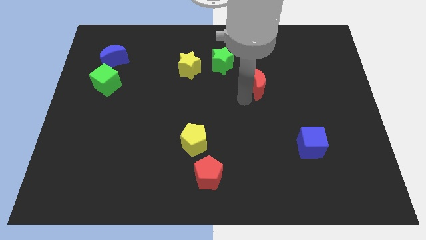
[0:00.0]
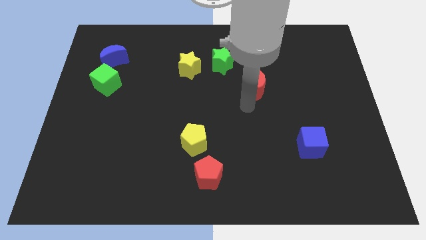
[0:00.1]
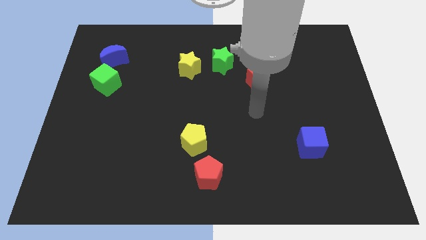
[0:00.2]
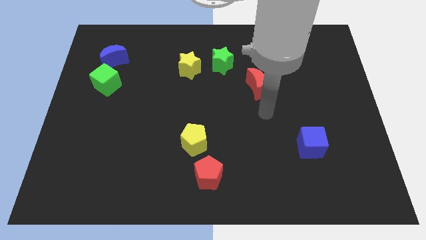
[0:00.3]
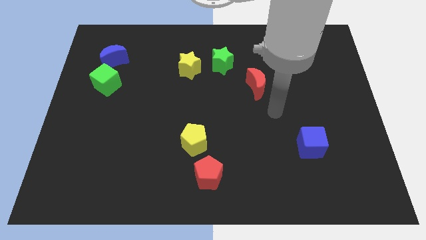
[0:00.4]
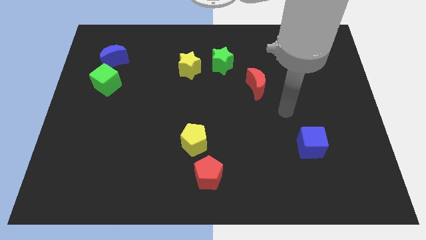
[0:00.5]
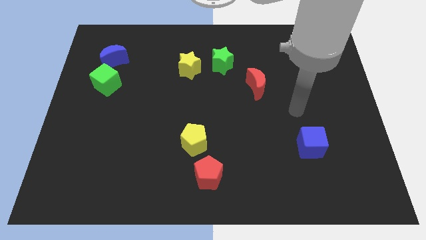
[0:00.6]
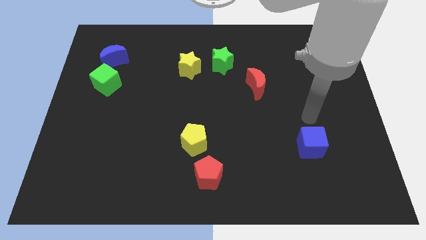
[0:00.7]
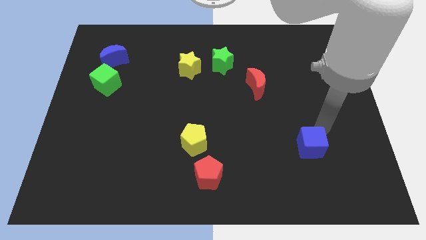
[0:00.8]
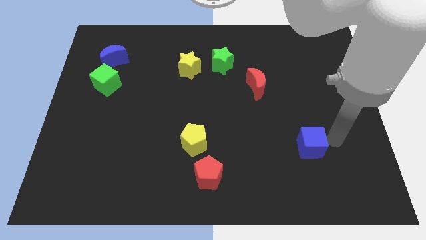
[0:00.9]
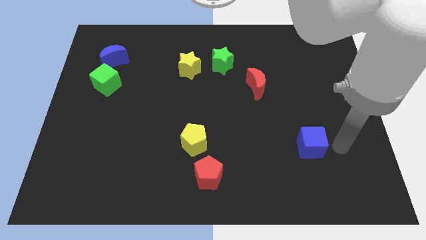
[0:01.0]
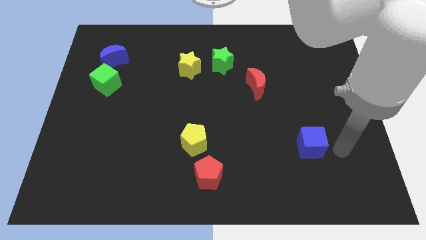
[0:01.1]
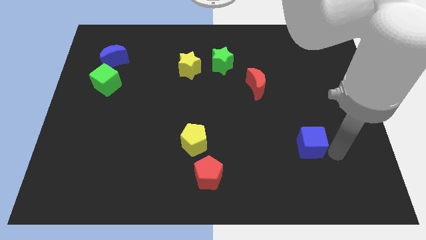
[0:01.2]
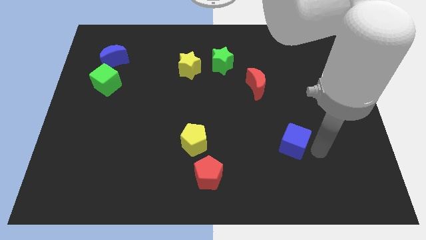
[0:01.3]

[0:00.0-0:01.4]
move your arm towards blue cube

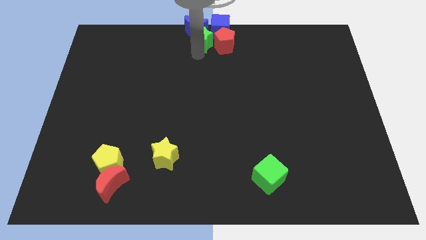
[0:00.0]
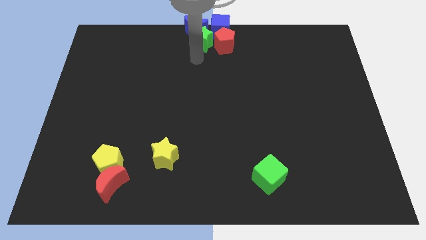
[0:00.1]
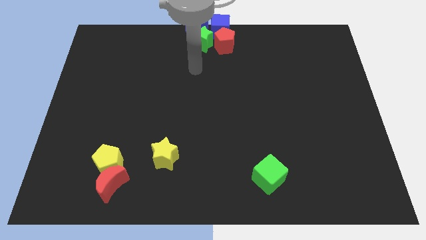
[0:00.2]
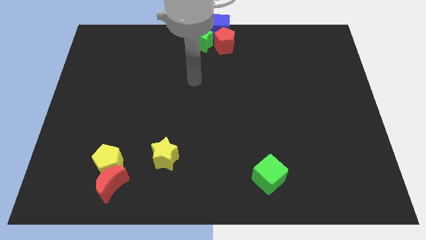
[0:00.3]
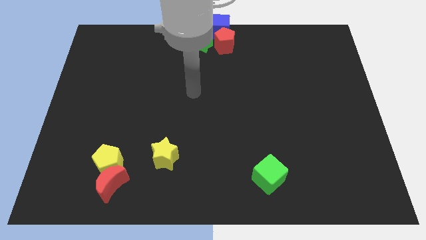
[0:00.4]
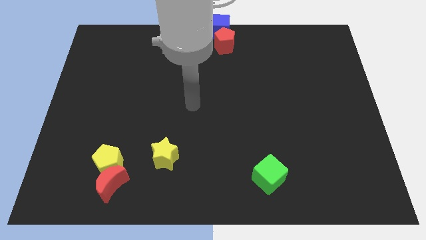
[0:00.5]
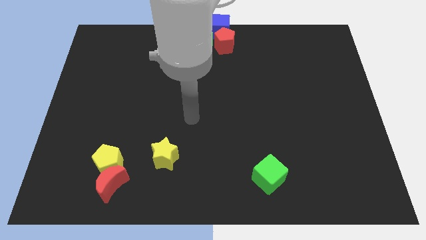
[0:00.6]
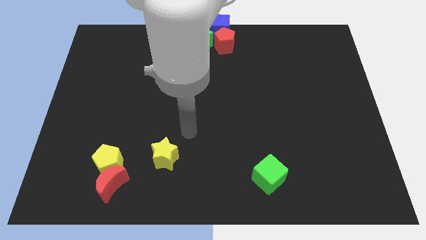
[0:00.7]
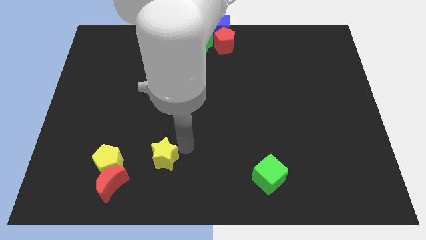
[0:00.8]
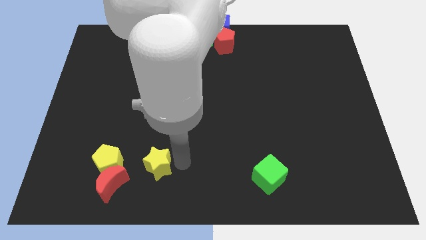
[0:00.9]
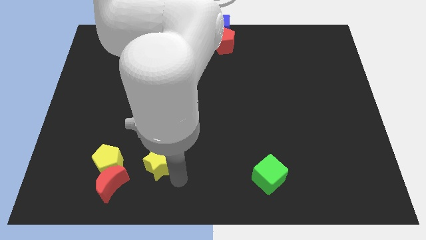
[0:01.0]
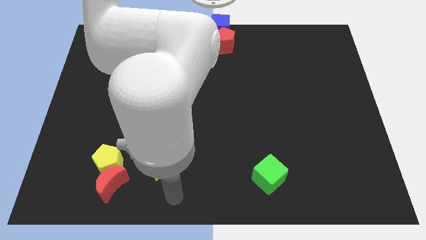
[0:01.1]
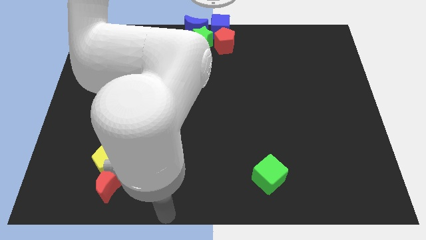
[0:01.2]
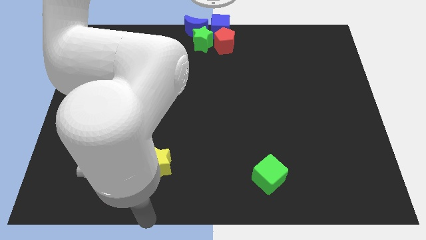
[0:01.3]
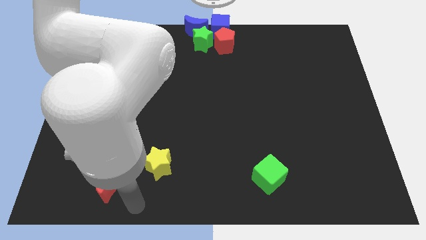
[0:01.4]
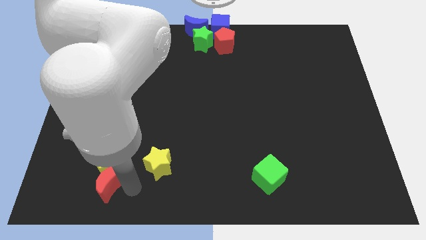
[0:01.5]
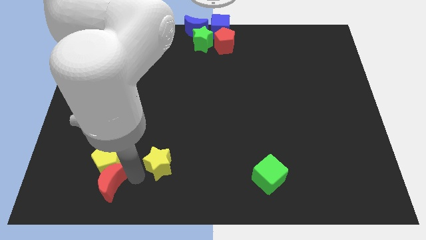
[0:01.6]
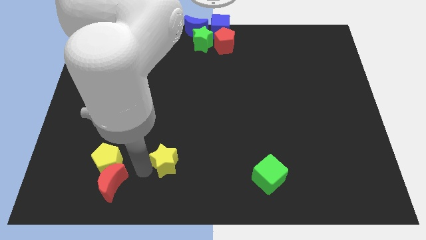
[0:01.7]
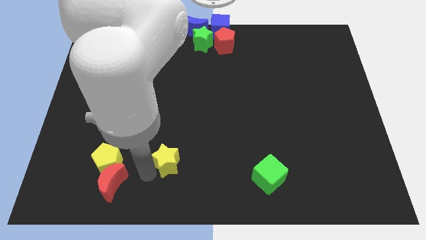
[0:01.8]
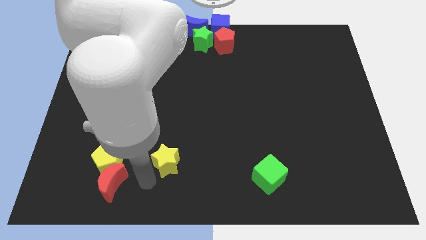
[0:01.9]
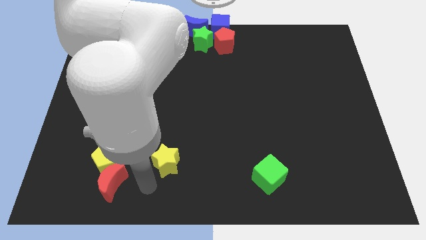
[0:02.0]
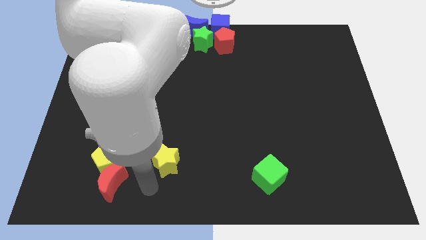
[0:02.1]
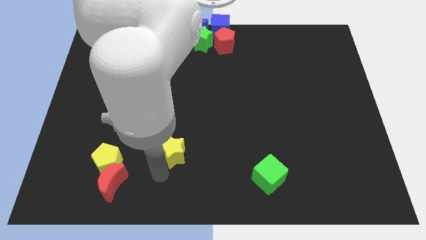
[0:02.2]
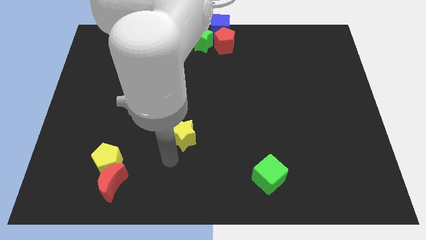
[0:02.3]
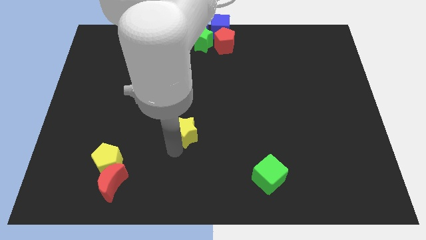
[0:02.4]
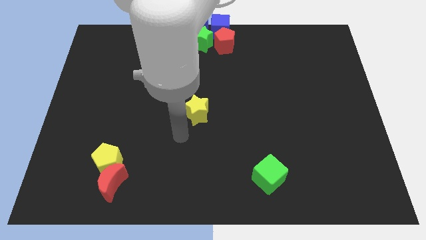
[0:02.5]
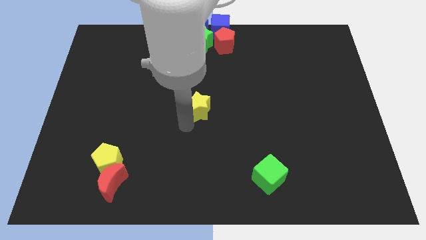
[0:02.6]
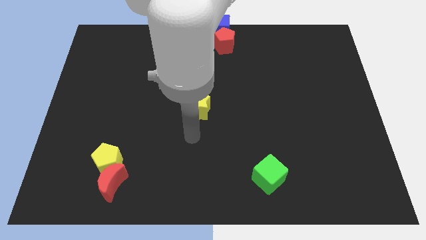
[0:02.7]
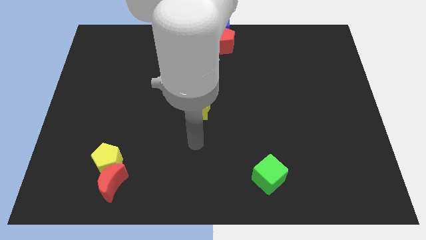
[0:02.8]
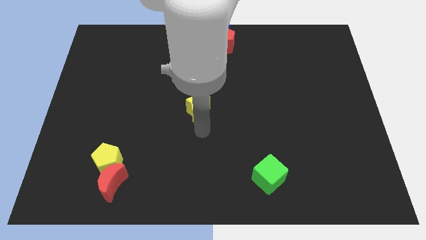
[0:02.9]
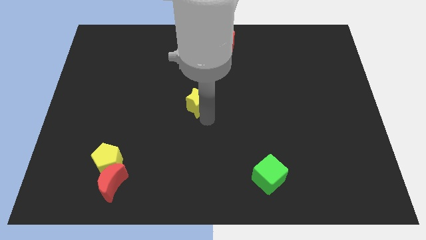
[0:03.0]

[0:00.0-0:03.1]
slide the yellow star to the center of the board

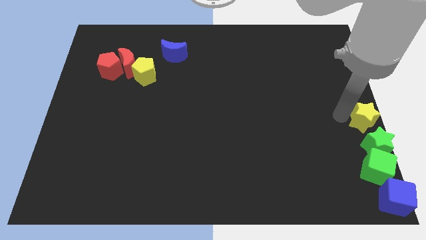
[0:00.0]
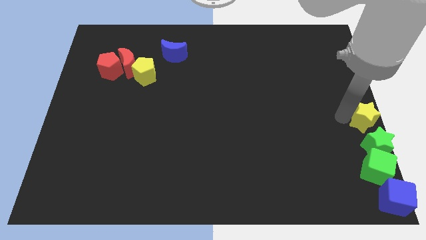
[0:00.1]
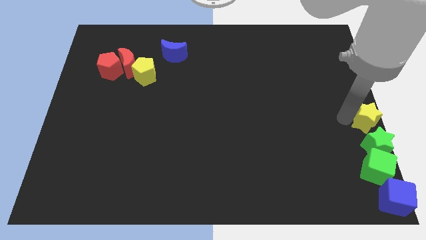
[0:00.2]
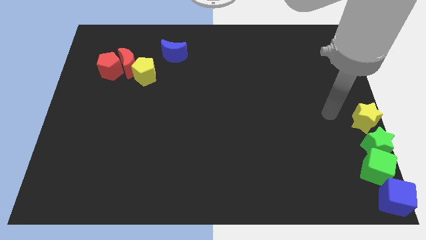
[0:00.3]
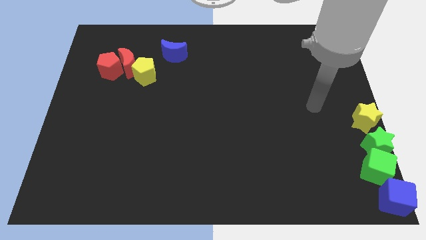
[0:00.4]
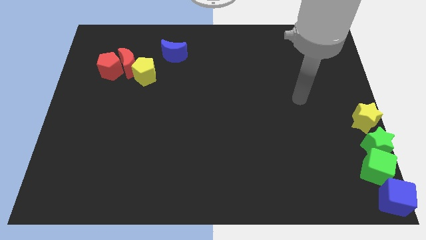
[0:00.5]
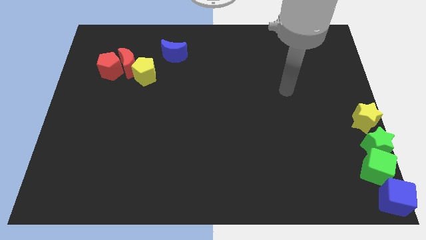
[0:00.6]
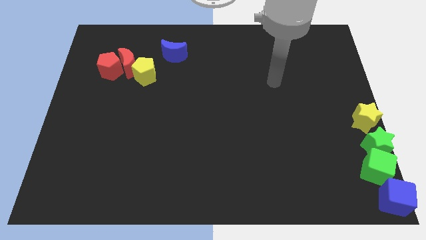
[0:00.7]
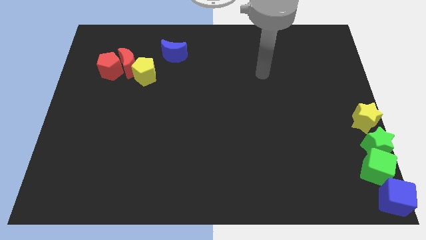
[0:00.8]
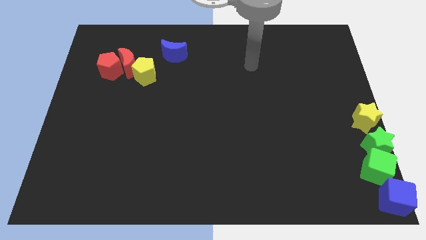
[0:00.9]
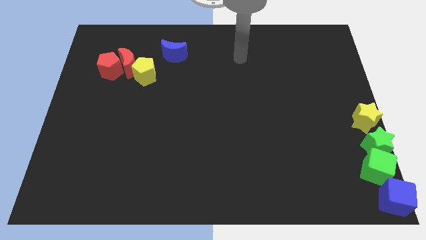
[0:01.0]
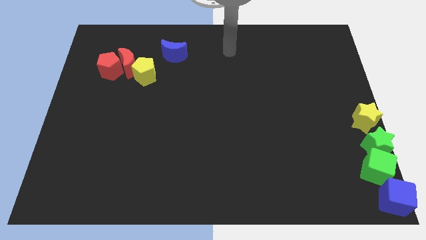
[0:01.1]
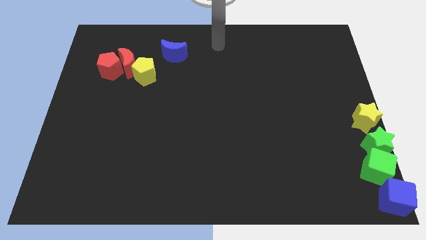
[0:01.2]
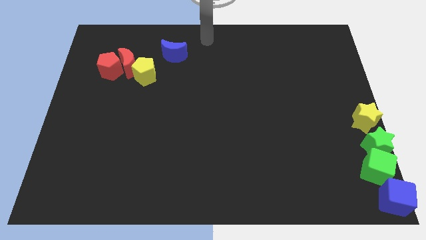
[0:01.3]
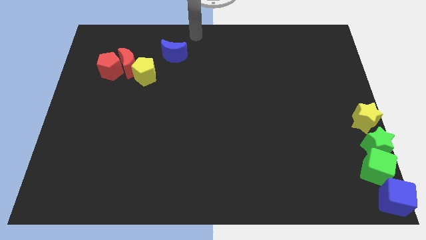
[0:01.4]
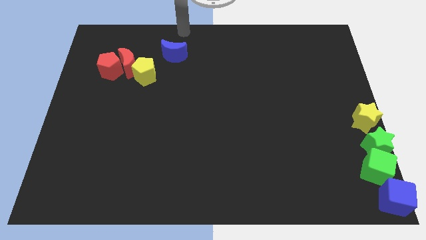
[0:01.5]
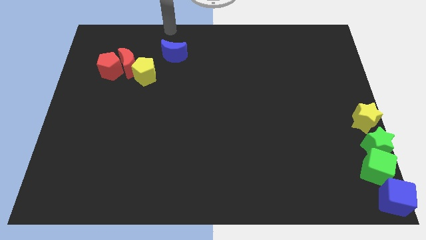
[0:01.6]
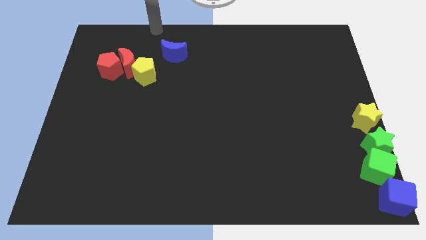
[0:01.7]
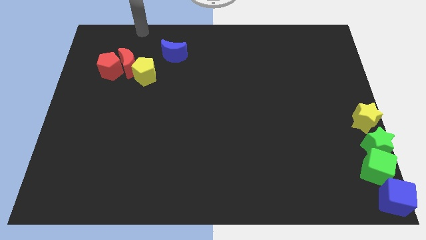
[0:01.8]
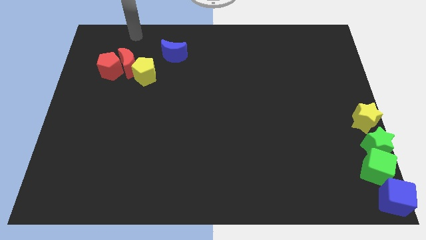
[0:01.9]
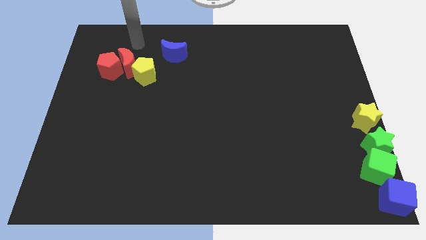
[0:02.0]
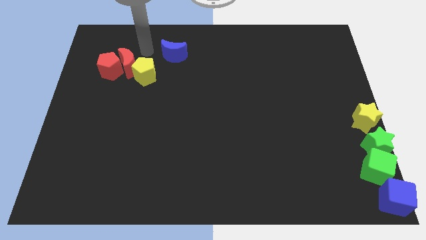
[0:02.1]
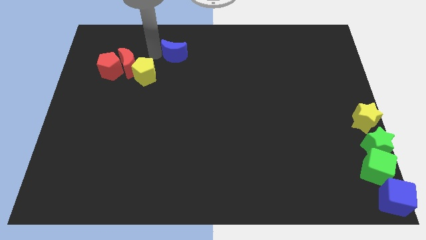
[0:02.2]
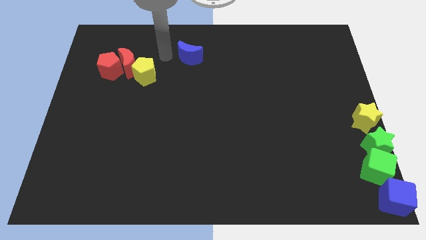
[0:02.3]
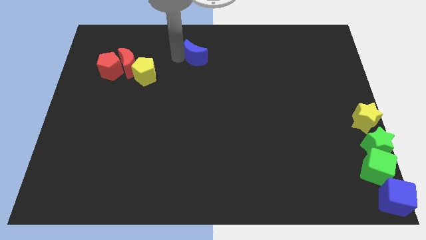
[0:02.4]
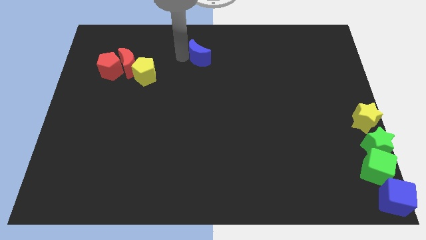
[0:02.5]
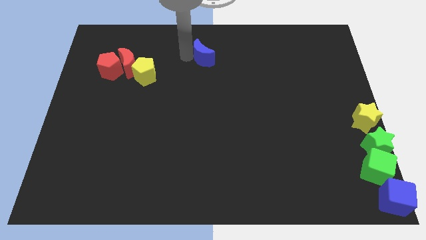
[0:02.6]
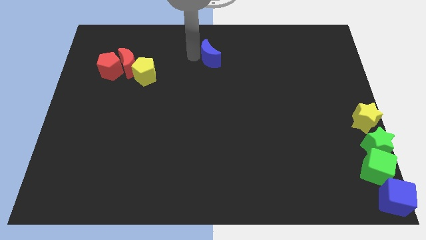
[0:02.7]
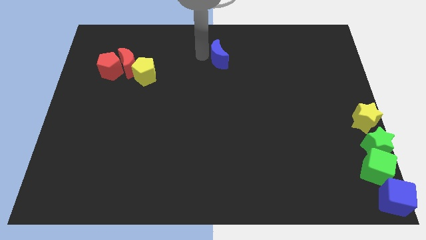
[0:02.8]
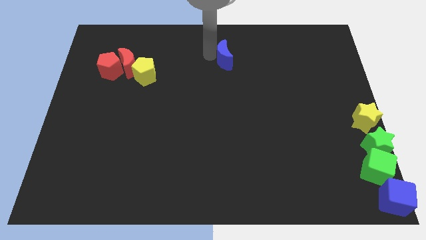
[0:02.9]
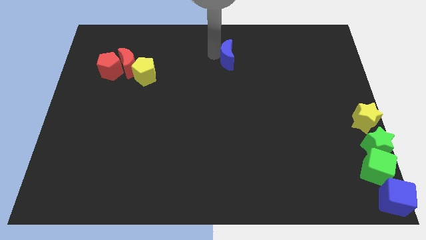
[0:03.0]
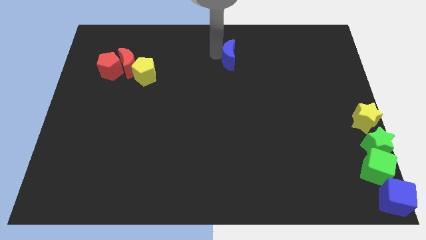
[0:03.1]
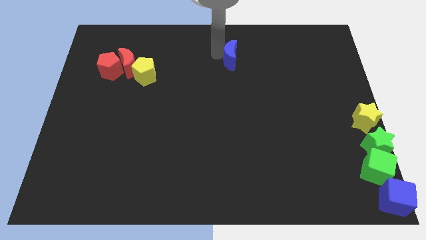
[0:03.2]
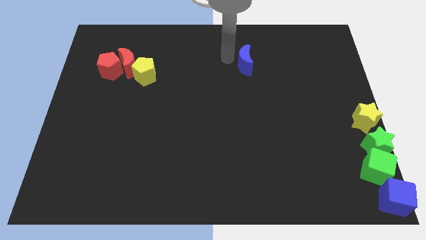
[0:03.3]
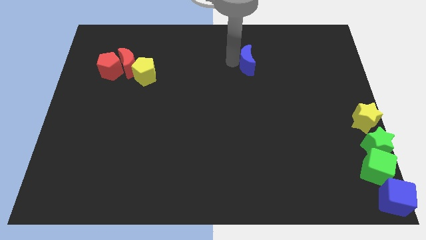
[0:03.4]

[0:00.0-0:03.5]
slightly move the blue moon towards the top center of the board

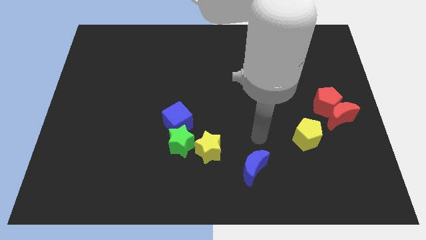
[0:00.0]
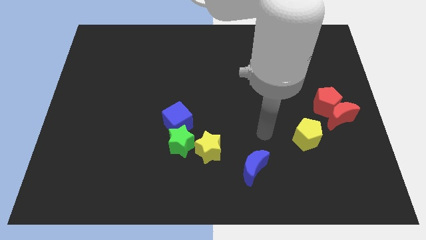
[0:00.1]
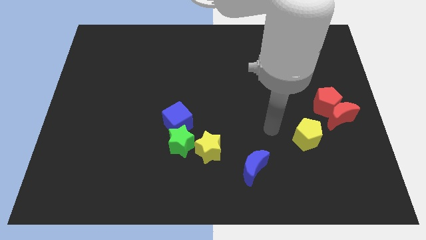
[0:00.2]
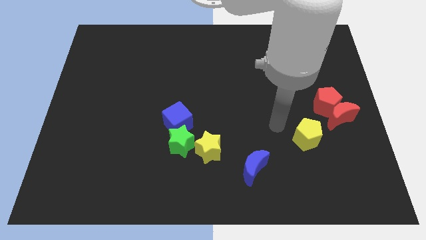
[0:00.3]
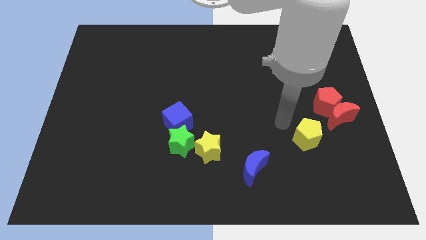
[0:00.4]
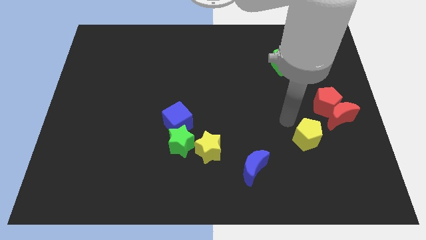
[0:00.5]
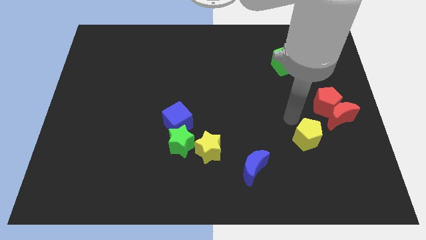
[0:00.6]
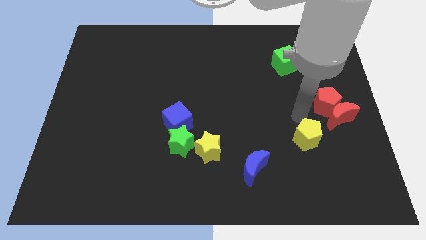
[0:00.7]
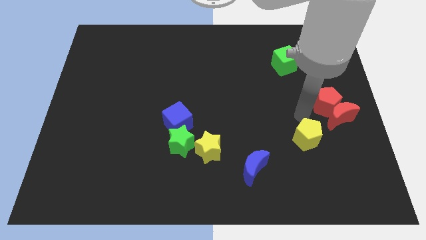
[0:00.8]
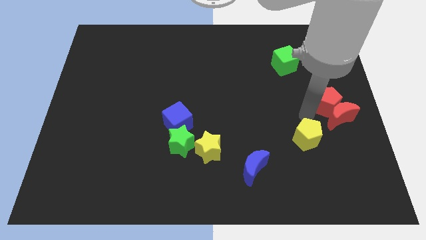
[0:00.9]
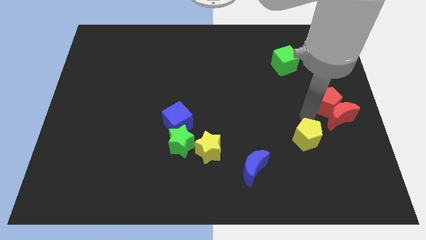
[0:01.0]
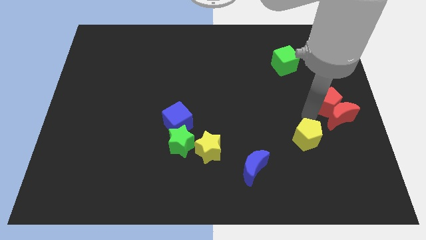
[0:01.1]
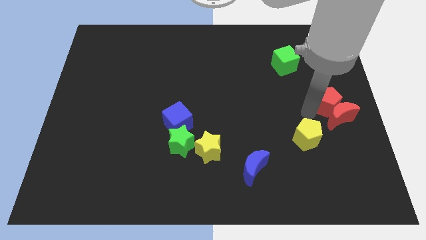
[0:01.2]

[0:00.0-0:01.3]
push your arm above yellow pentagon
